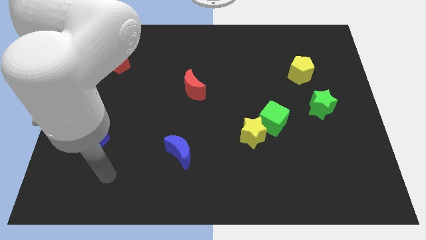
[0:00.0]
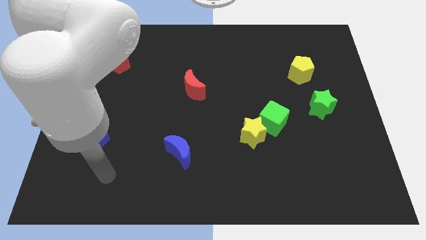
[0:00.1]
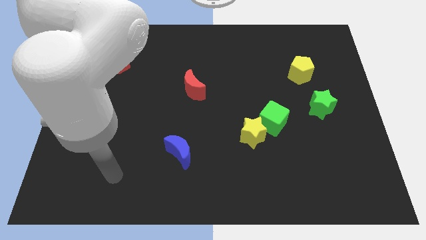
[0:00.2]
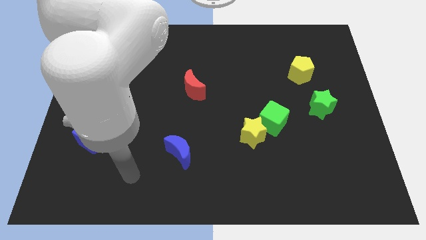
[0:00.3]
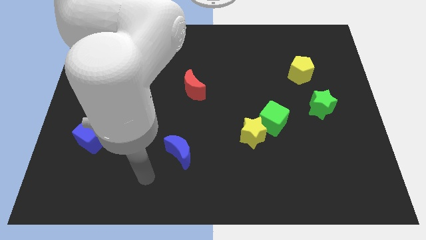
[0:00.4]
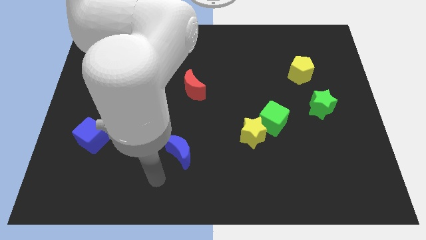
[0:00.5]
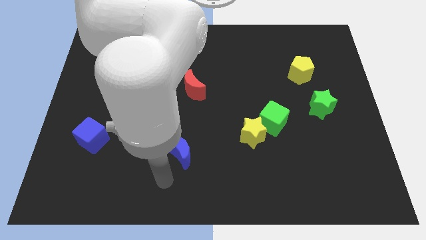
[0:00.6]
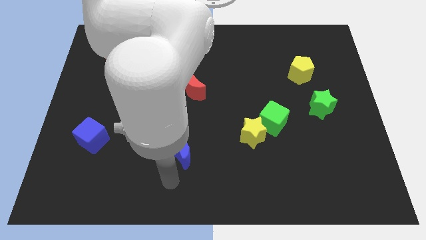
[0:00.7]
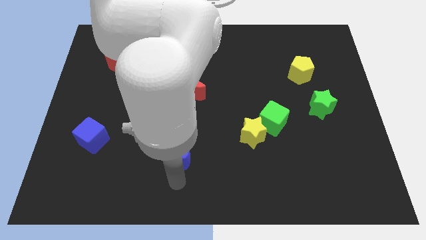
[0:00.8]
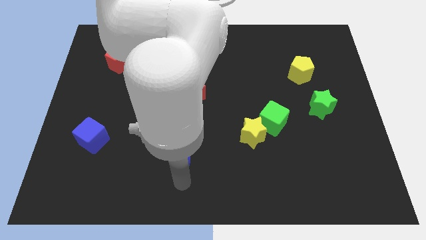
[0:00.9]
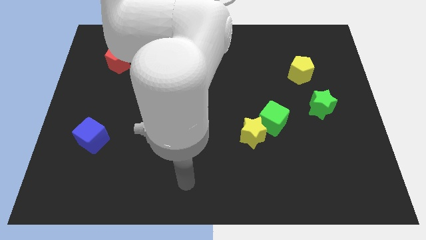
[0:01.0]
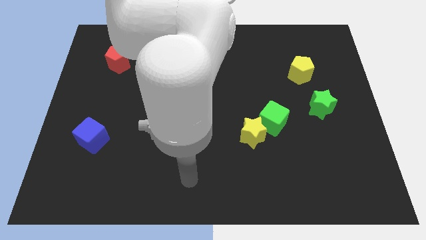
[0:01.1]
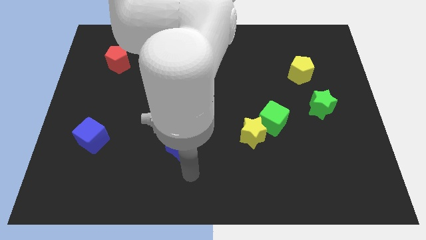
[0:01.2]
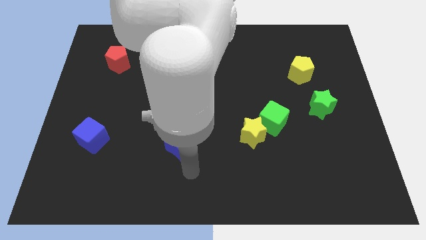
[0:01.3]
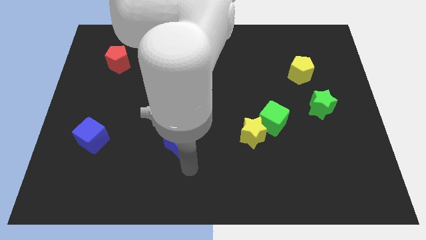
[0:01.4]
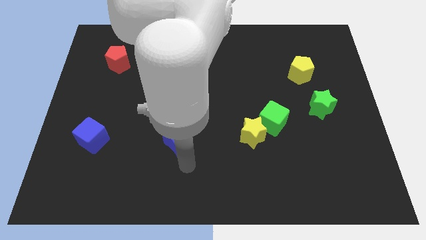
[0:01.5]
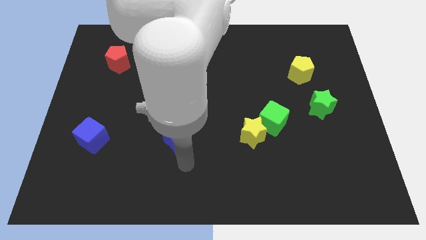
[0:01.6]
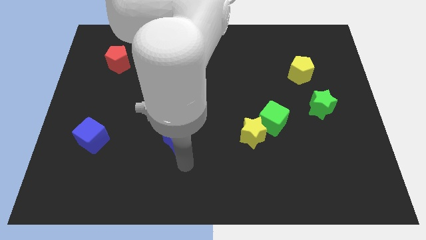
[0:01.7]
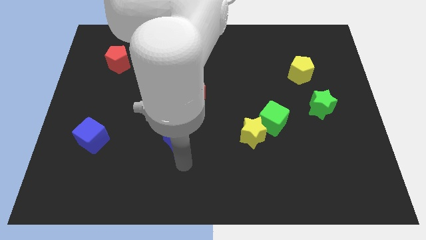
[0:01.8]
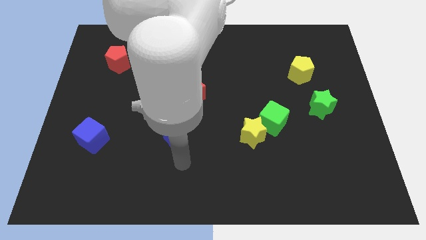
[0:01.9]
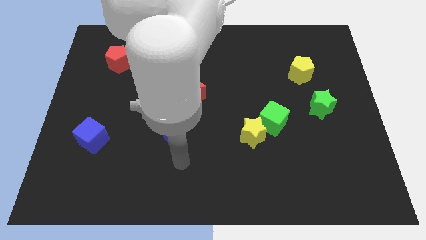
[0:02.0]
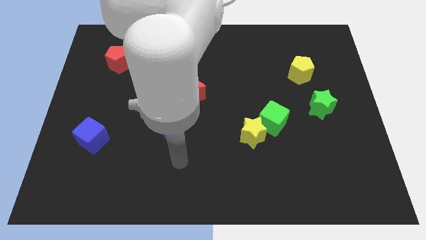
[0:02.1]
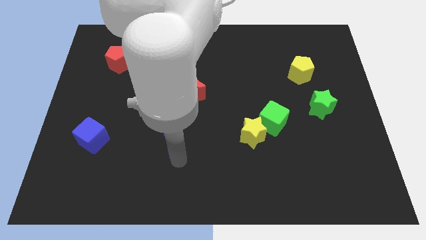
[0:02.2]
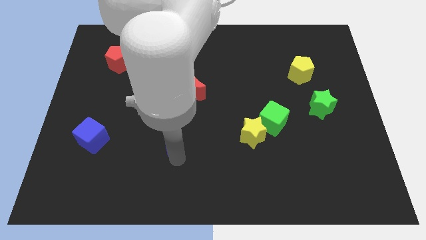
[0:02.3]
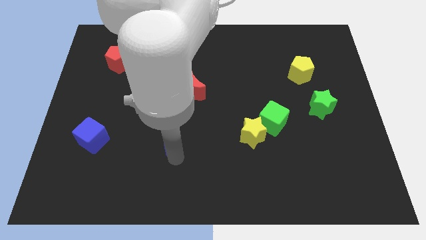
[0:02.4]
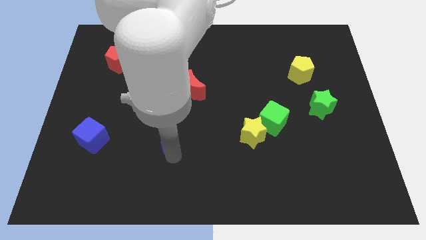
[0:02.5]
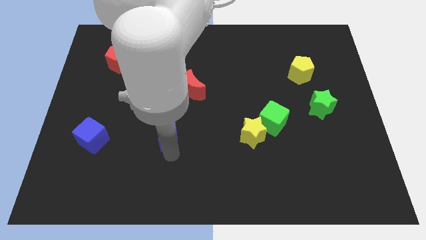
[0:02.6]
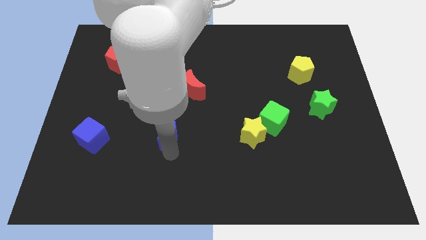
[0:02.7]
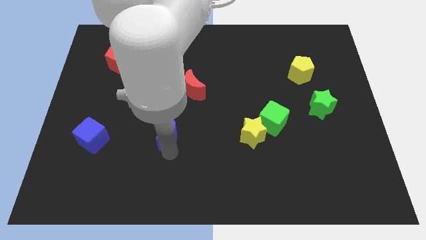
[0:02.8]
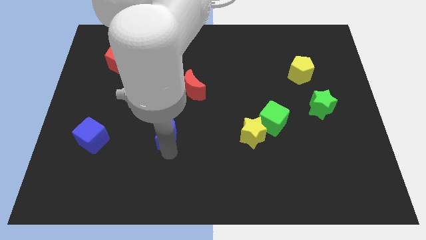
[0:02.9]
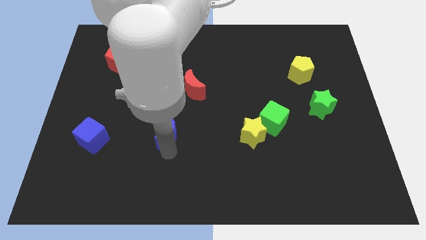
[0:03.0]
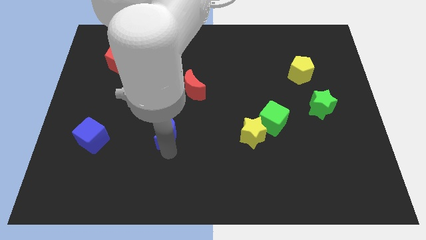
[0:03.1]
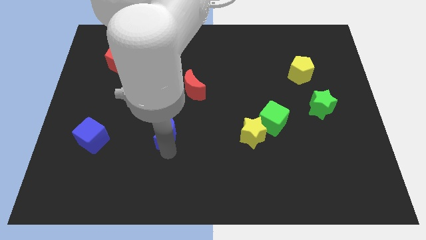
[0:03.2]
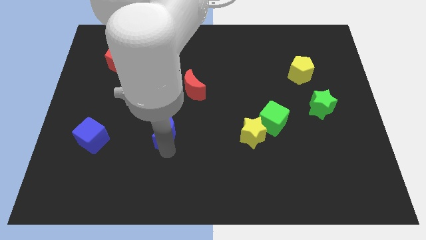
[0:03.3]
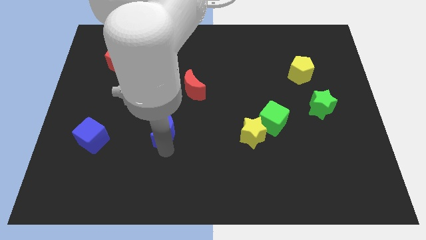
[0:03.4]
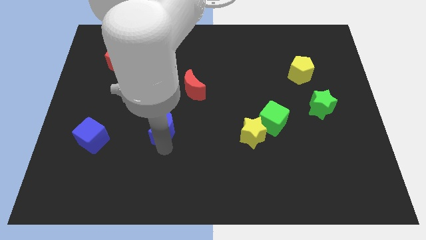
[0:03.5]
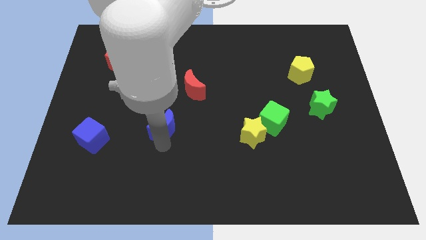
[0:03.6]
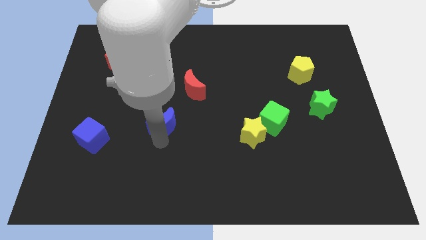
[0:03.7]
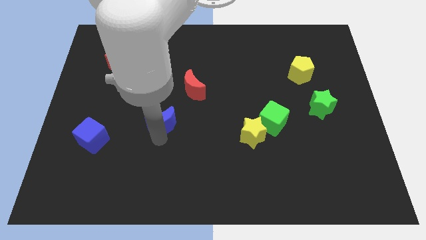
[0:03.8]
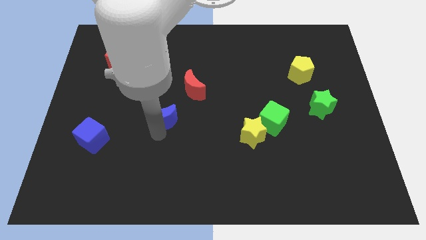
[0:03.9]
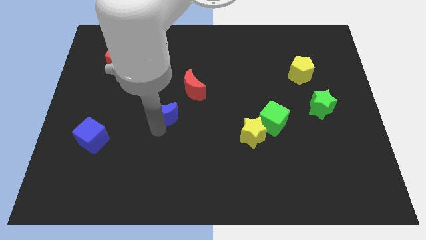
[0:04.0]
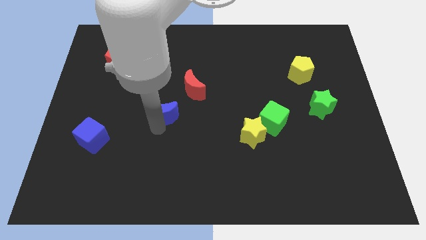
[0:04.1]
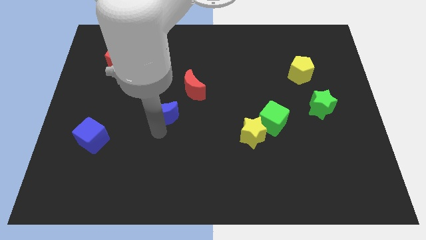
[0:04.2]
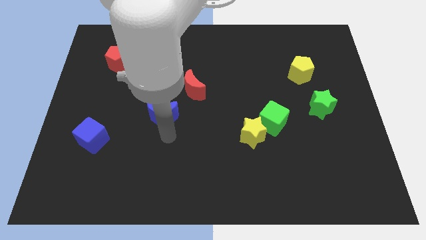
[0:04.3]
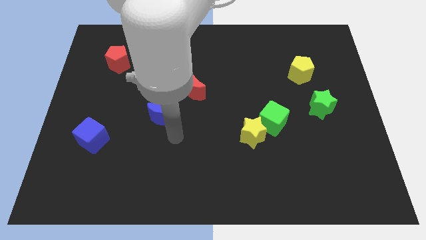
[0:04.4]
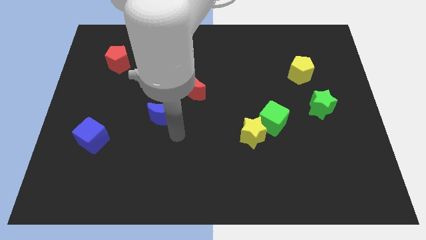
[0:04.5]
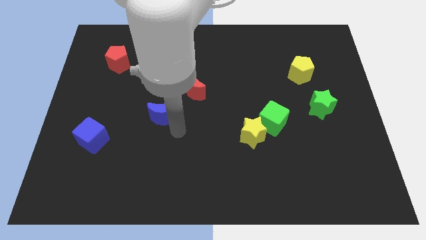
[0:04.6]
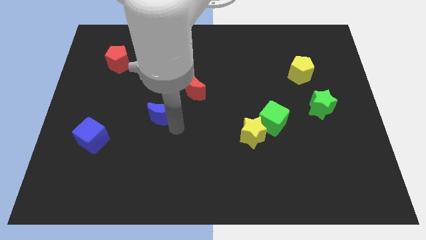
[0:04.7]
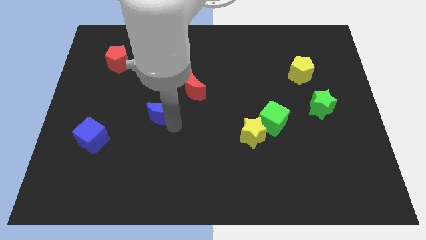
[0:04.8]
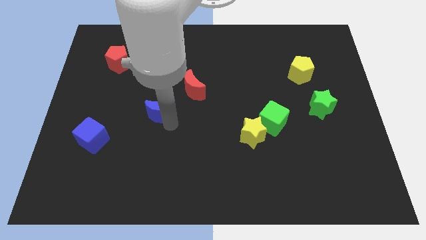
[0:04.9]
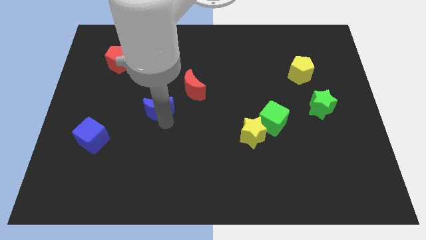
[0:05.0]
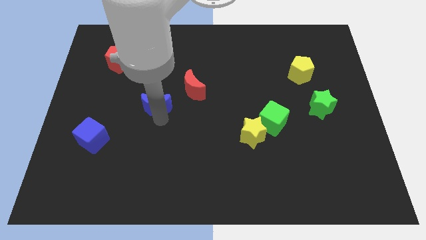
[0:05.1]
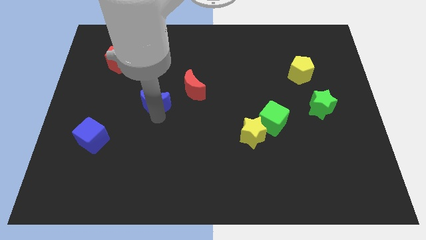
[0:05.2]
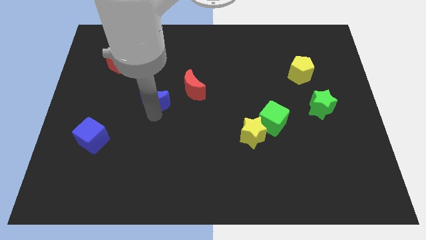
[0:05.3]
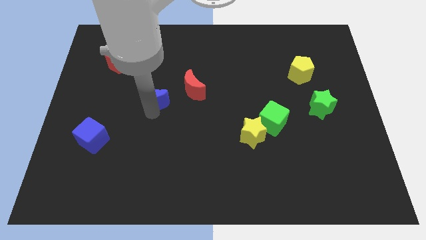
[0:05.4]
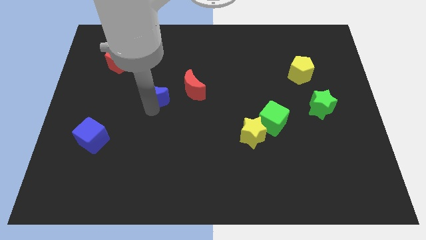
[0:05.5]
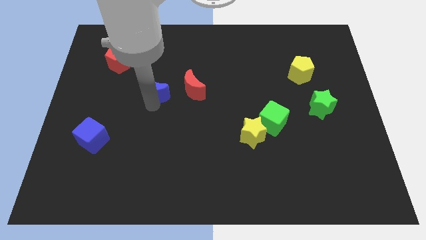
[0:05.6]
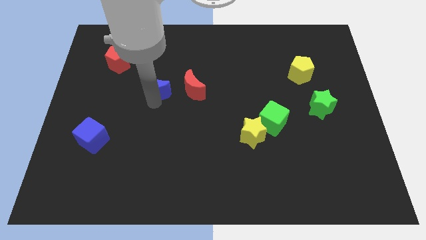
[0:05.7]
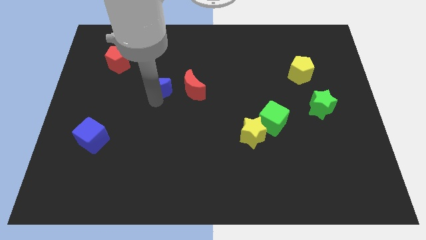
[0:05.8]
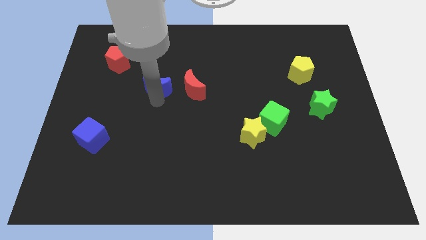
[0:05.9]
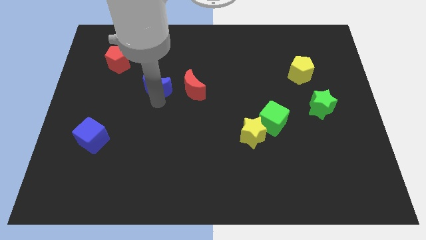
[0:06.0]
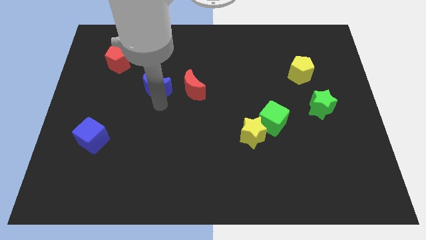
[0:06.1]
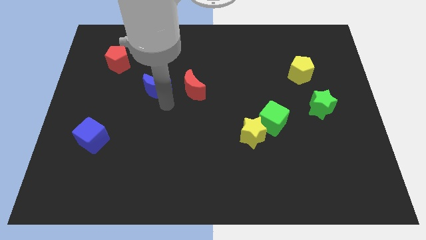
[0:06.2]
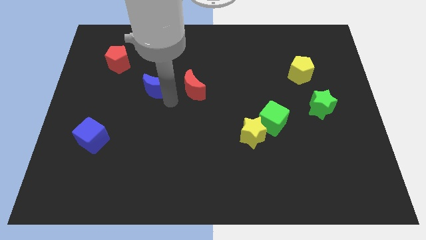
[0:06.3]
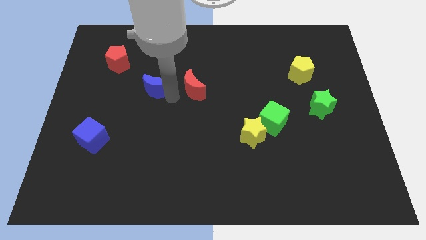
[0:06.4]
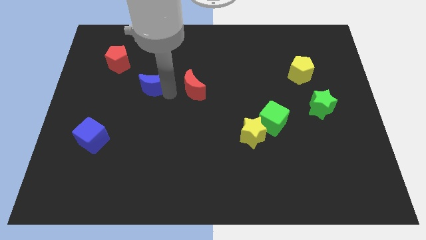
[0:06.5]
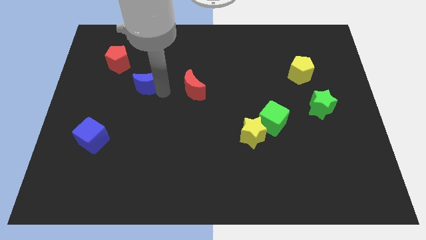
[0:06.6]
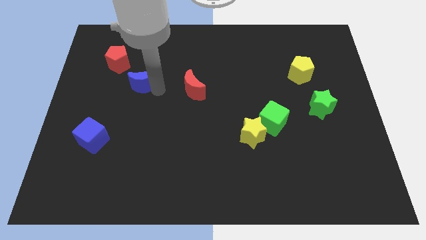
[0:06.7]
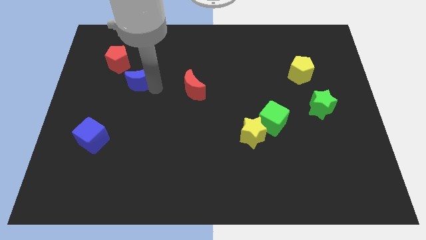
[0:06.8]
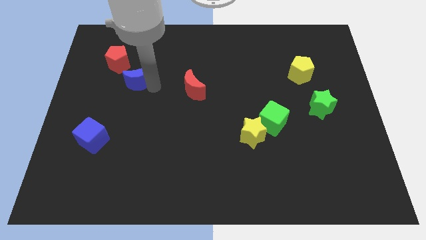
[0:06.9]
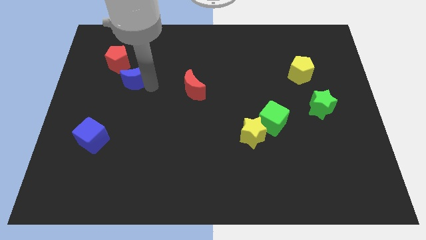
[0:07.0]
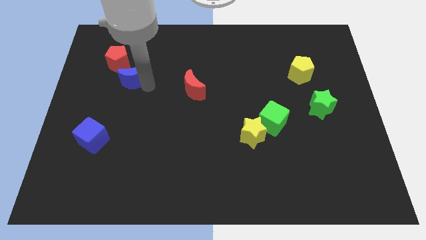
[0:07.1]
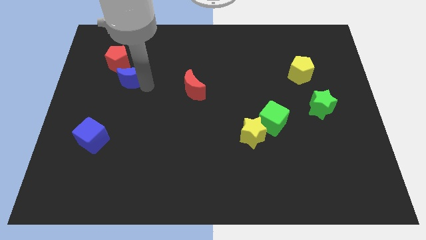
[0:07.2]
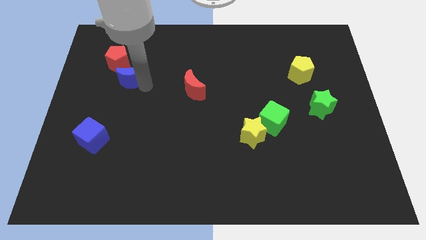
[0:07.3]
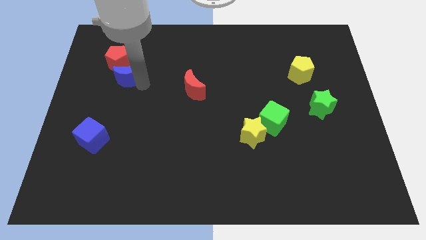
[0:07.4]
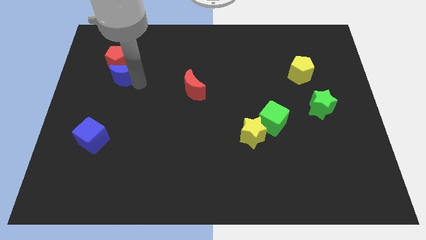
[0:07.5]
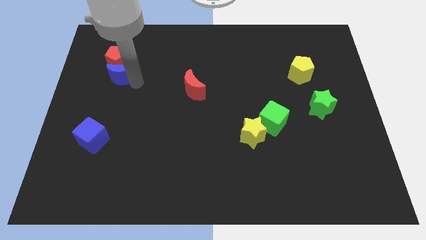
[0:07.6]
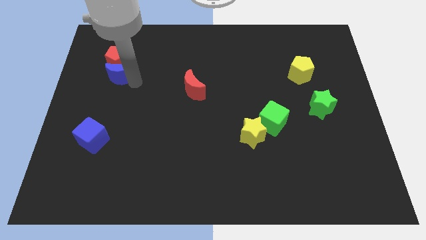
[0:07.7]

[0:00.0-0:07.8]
move the blue moon to the red pentagon

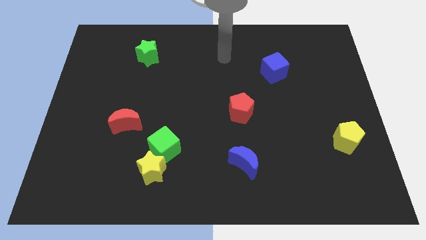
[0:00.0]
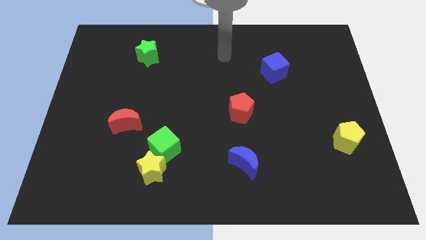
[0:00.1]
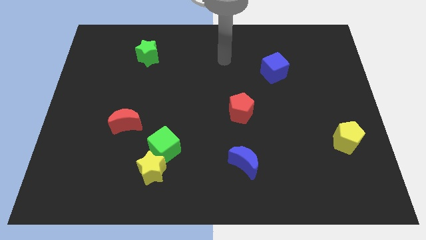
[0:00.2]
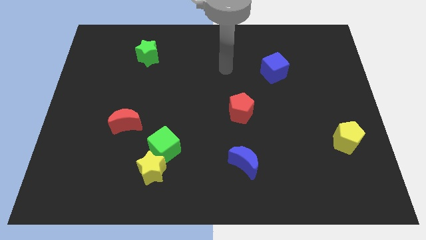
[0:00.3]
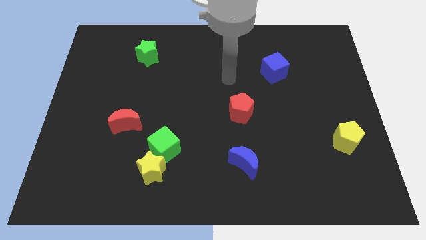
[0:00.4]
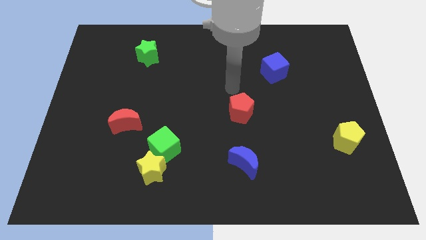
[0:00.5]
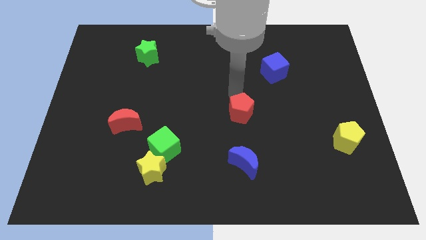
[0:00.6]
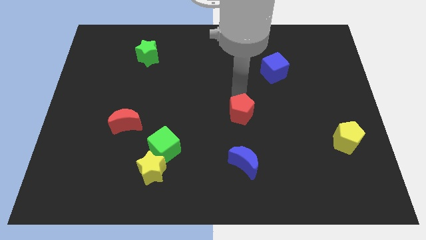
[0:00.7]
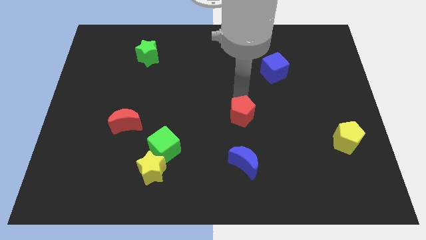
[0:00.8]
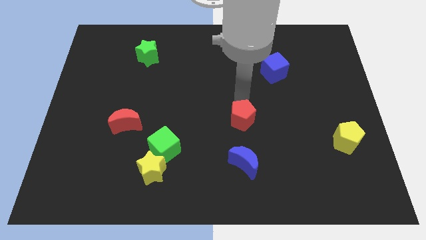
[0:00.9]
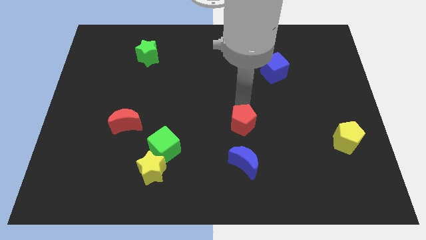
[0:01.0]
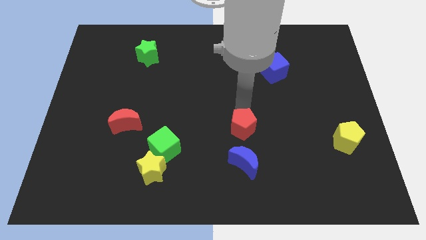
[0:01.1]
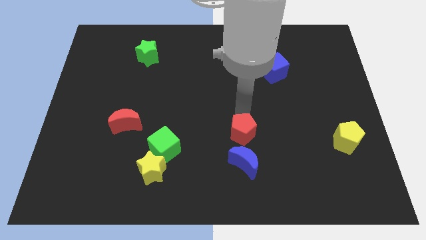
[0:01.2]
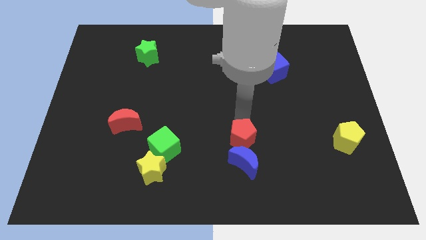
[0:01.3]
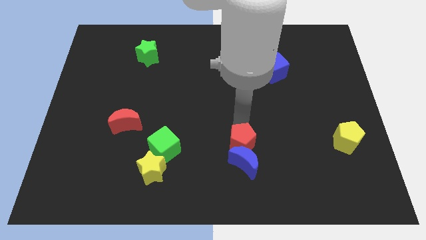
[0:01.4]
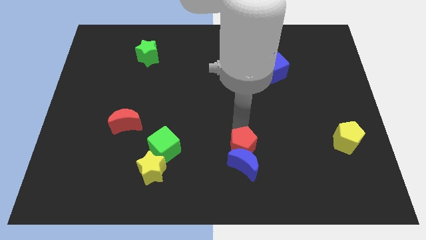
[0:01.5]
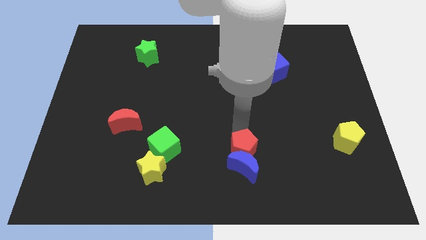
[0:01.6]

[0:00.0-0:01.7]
put the red pentagon close to the blue moon
